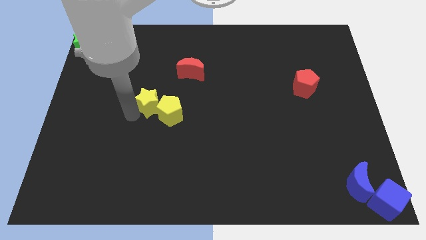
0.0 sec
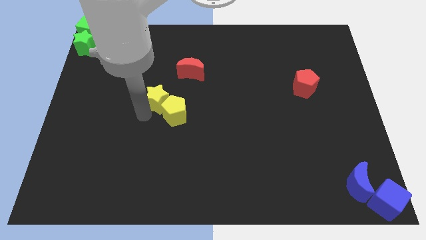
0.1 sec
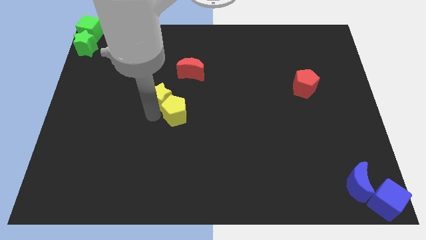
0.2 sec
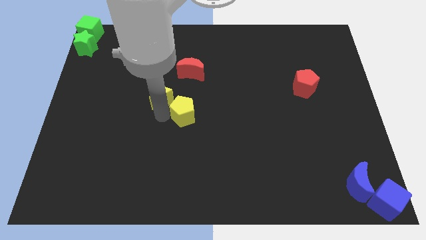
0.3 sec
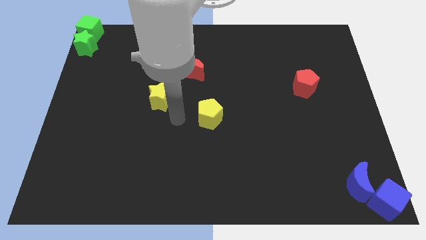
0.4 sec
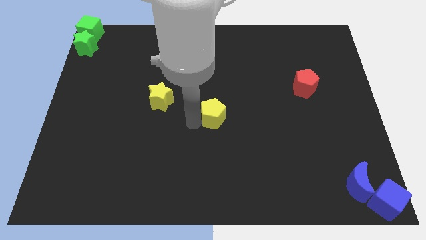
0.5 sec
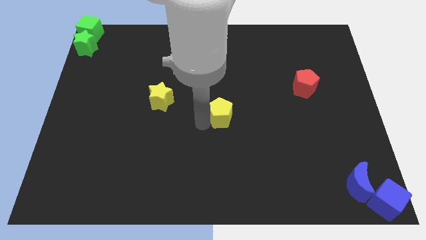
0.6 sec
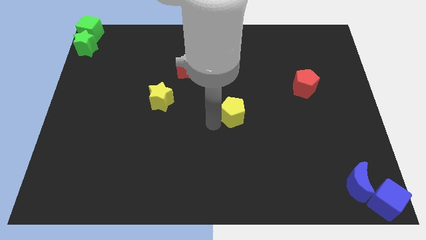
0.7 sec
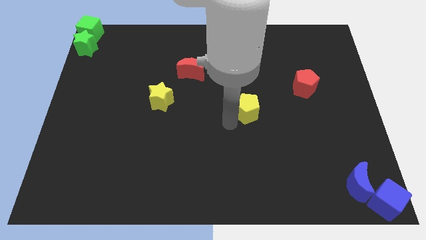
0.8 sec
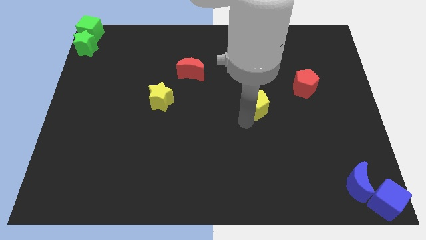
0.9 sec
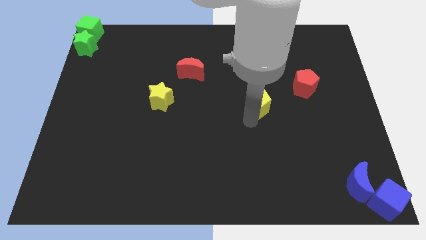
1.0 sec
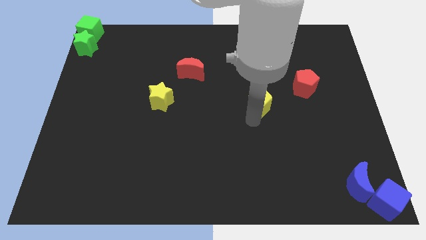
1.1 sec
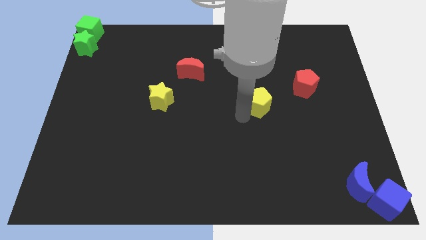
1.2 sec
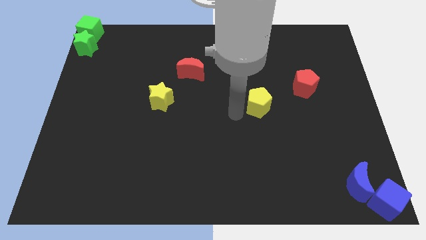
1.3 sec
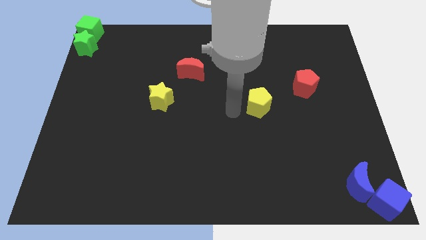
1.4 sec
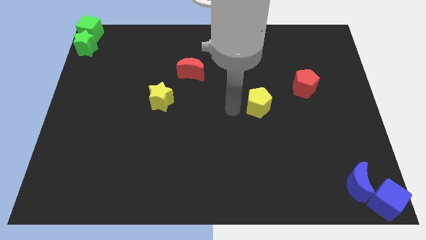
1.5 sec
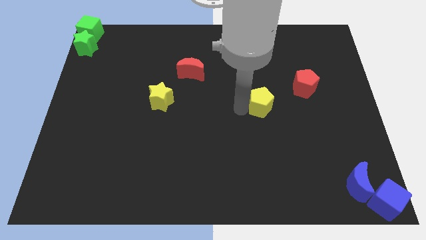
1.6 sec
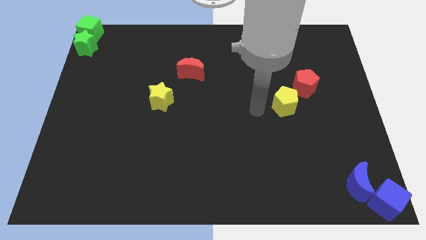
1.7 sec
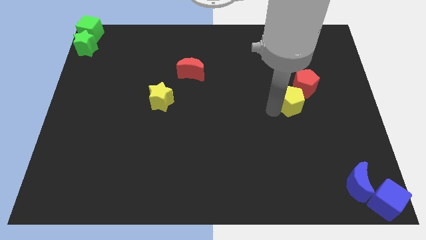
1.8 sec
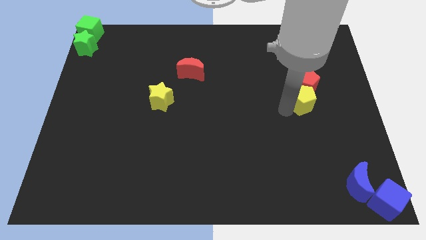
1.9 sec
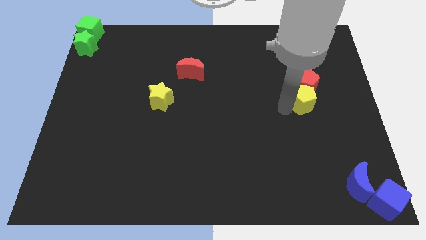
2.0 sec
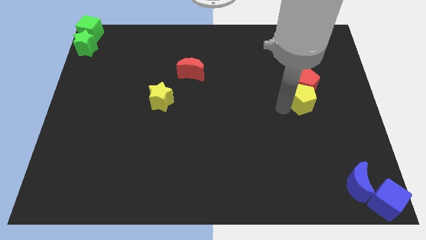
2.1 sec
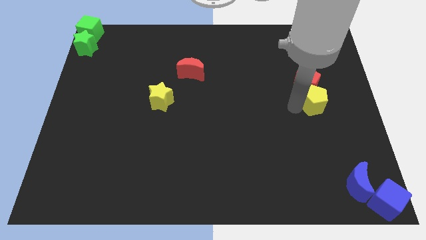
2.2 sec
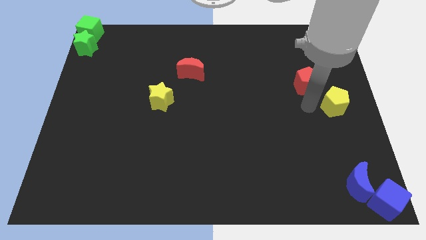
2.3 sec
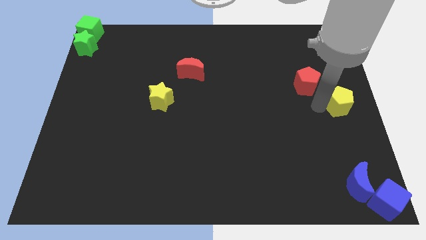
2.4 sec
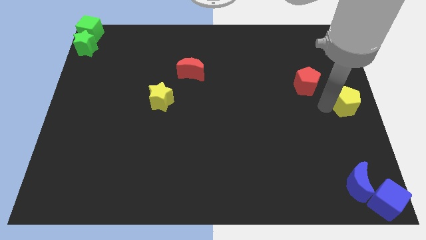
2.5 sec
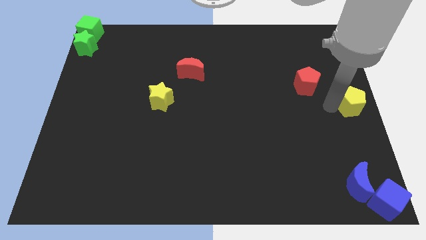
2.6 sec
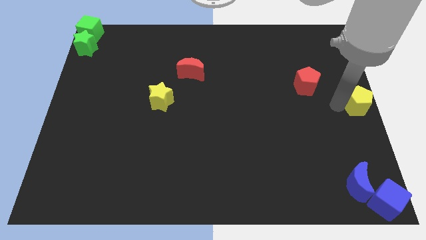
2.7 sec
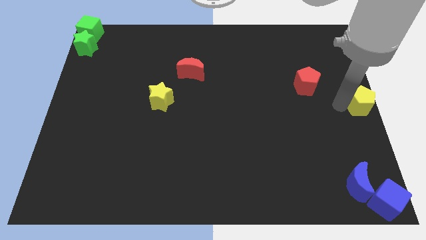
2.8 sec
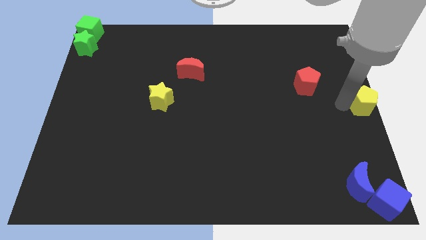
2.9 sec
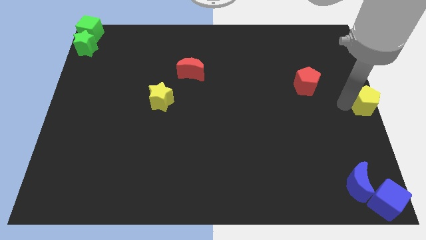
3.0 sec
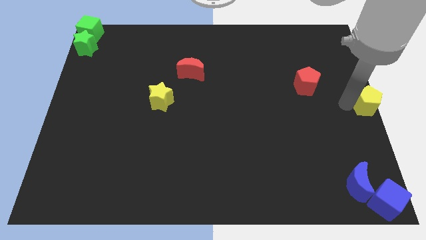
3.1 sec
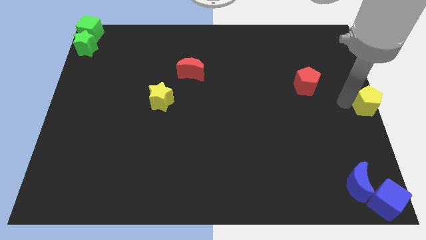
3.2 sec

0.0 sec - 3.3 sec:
push the yellow pentagon to the center right

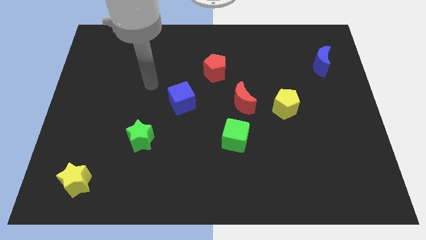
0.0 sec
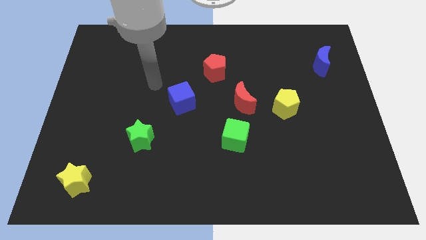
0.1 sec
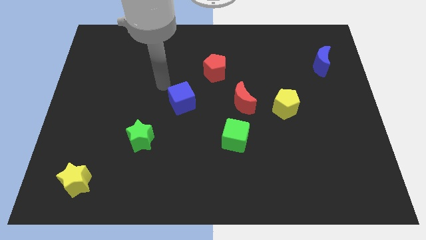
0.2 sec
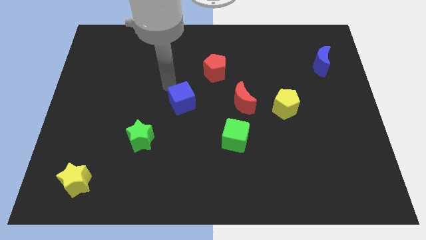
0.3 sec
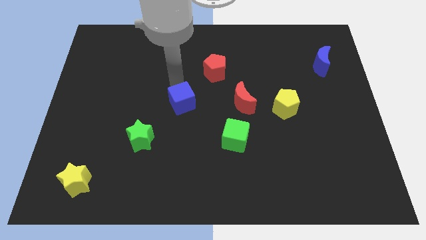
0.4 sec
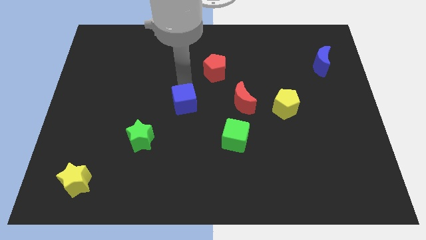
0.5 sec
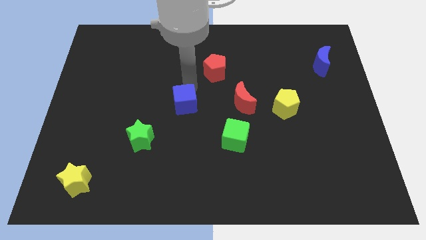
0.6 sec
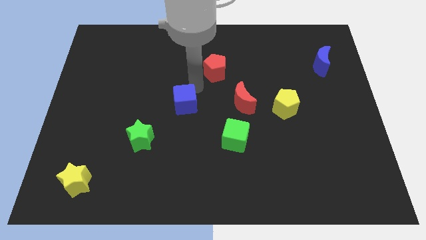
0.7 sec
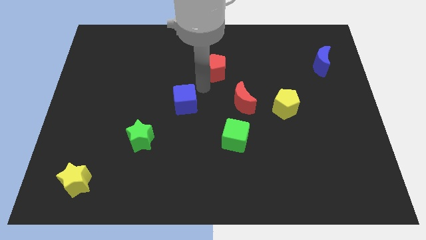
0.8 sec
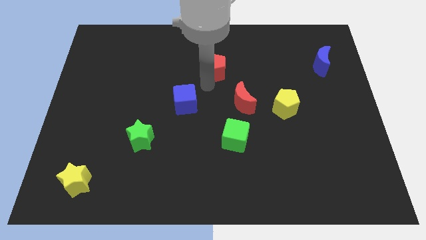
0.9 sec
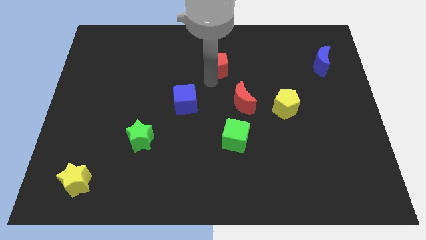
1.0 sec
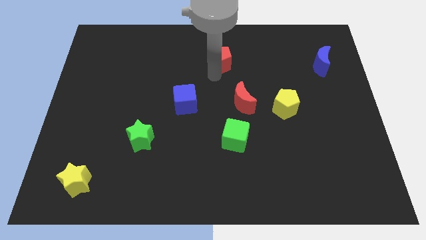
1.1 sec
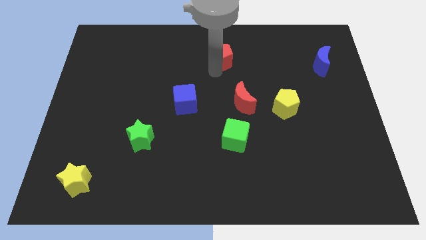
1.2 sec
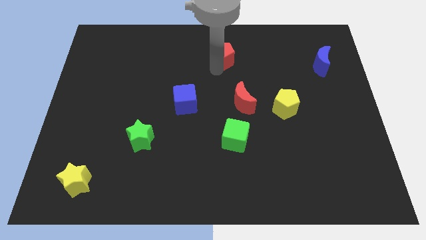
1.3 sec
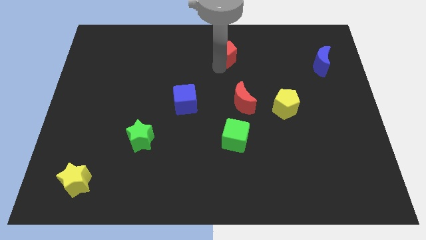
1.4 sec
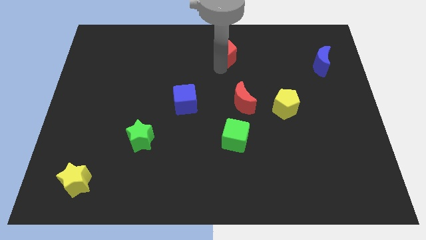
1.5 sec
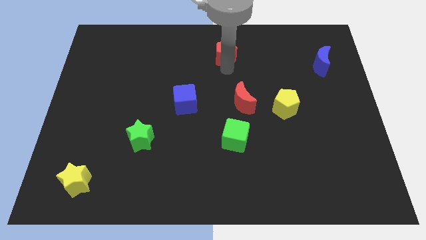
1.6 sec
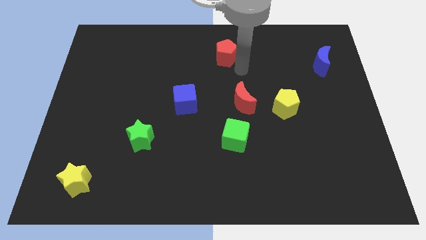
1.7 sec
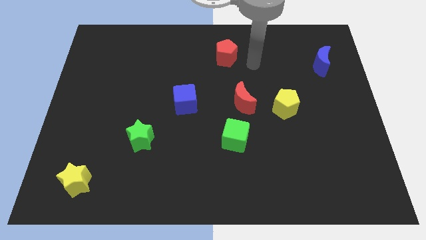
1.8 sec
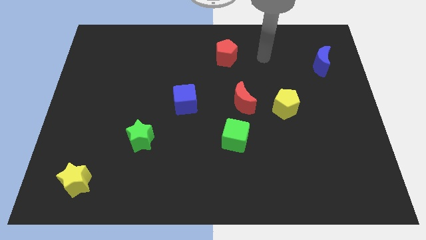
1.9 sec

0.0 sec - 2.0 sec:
place the red pentagon parallel to the top center of the board

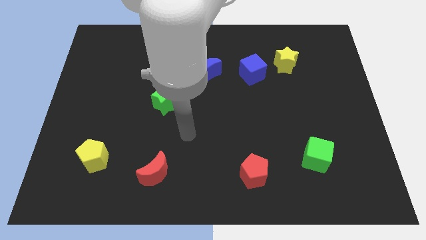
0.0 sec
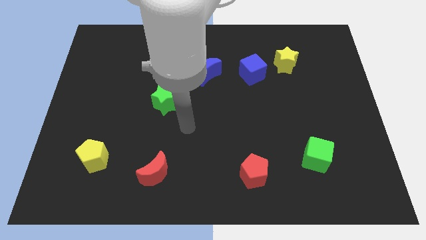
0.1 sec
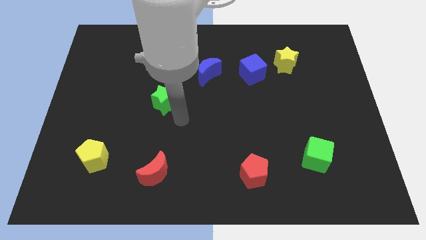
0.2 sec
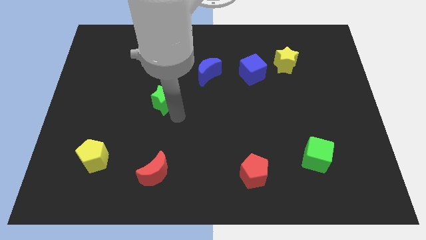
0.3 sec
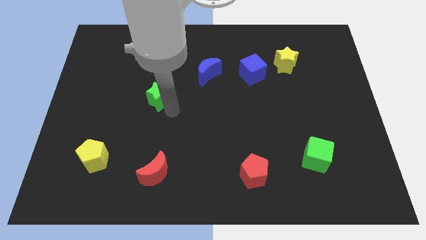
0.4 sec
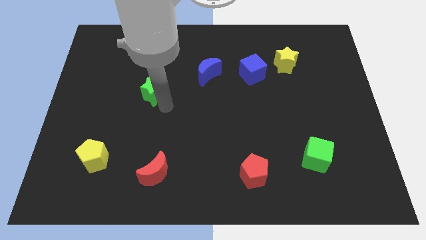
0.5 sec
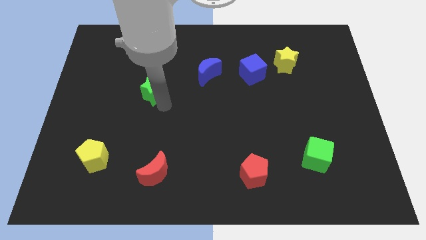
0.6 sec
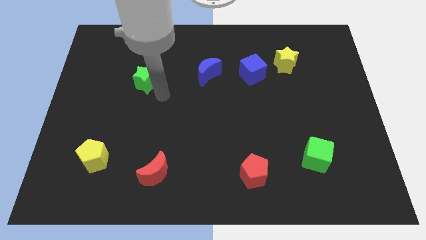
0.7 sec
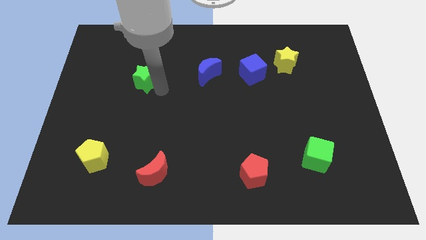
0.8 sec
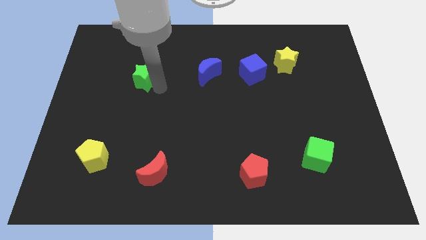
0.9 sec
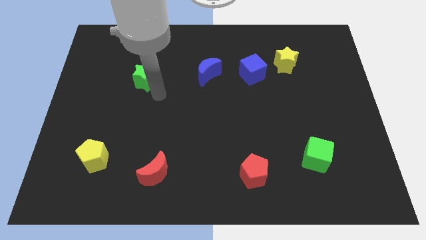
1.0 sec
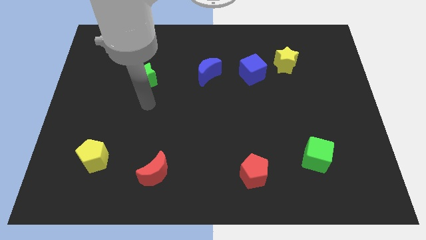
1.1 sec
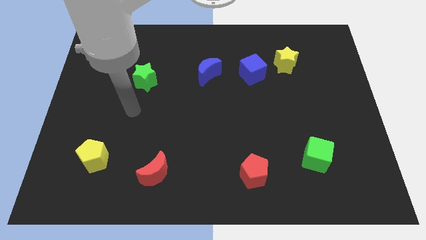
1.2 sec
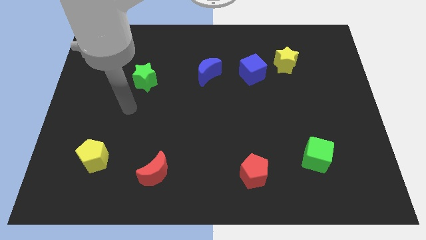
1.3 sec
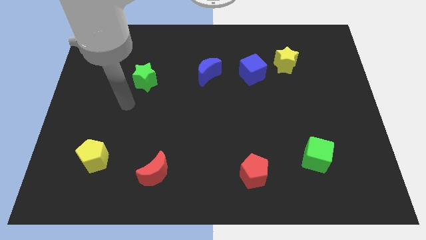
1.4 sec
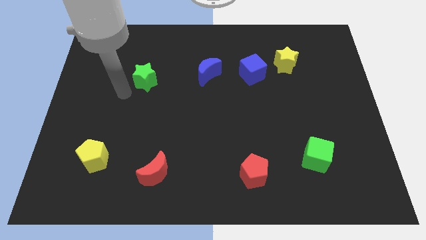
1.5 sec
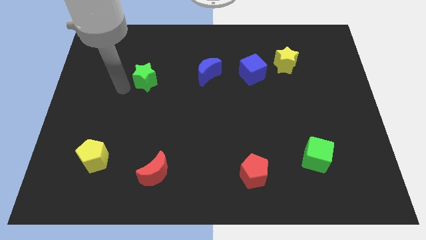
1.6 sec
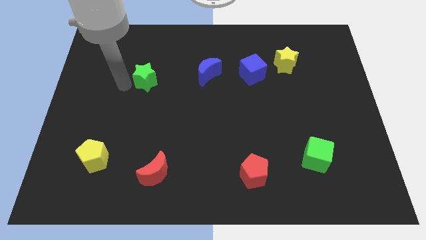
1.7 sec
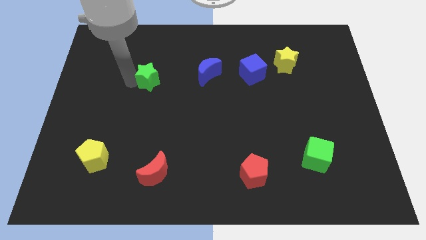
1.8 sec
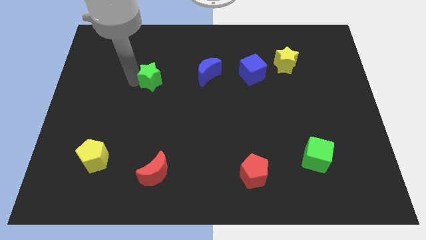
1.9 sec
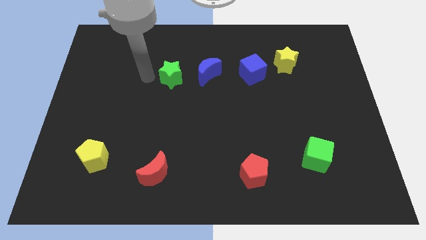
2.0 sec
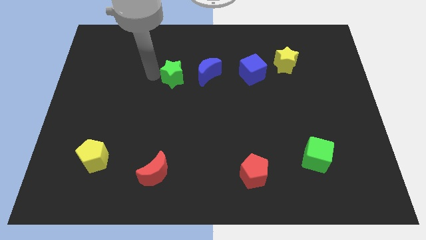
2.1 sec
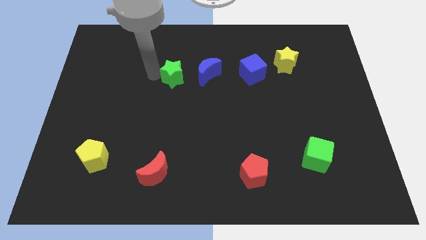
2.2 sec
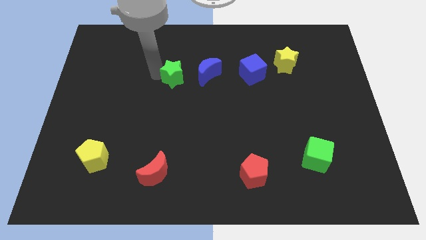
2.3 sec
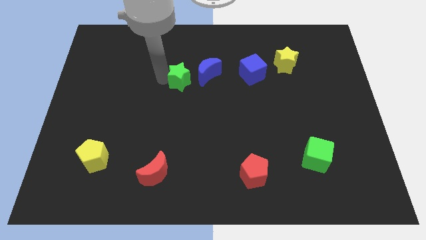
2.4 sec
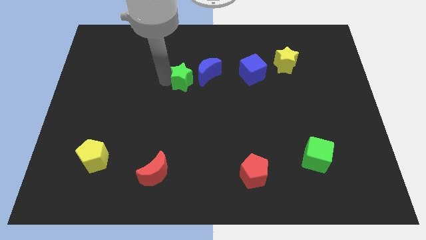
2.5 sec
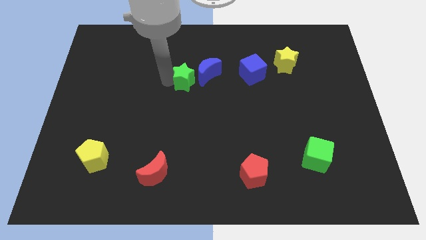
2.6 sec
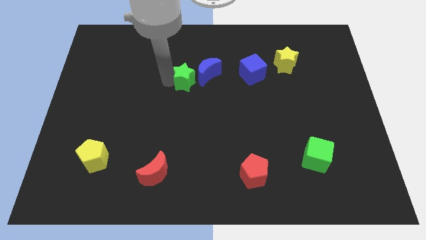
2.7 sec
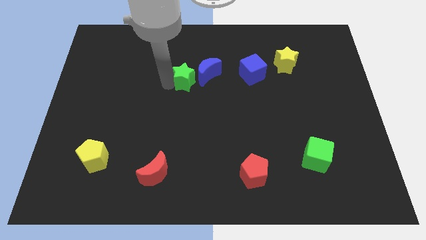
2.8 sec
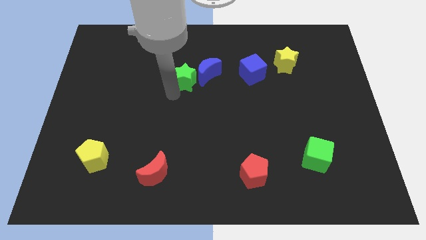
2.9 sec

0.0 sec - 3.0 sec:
push green star beside blue crescent

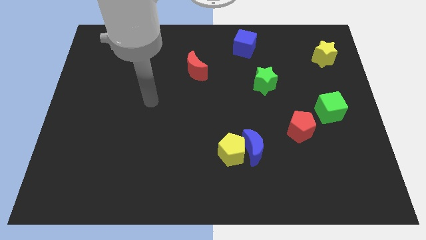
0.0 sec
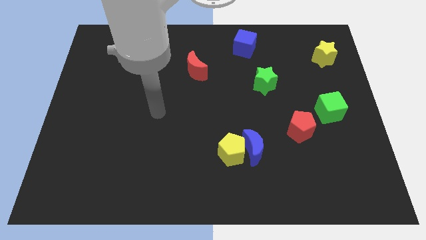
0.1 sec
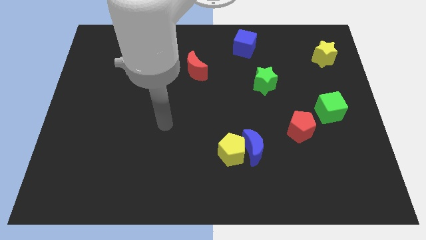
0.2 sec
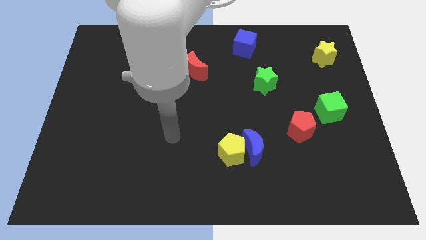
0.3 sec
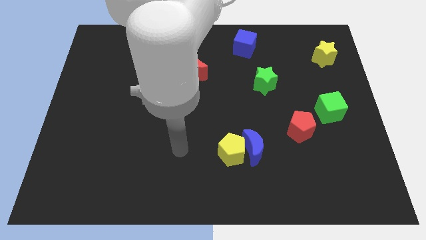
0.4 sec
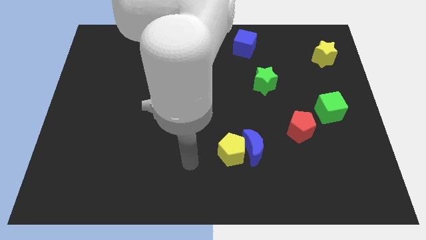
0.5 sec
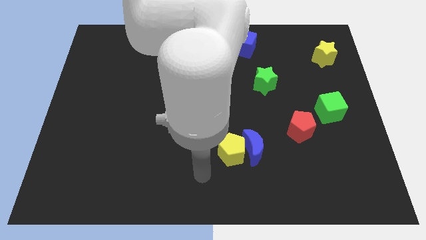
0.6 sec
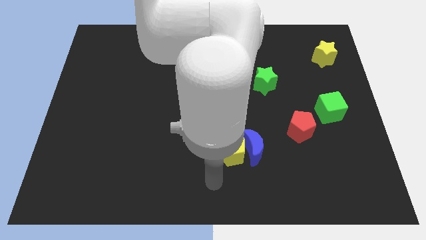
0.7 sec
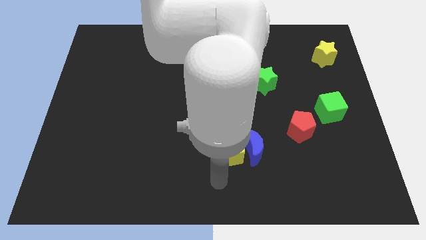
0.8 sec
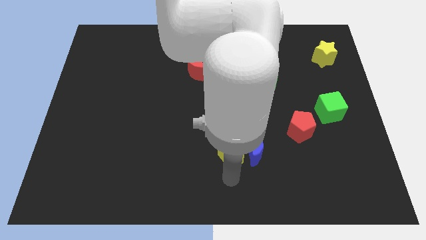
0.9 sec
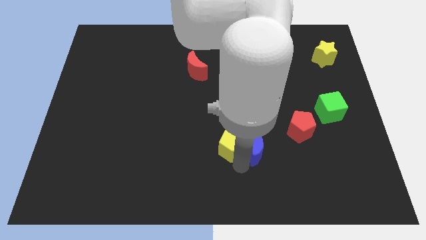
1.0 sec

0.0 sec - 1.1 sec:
move the arm below the yellow pentagon
